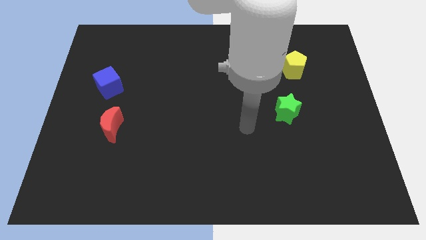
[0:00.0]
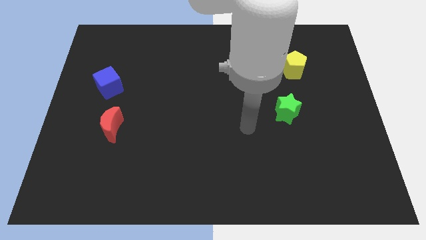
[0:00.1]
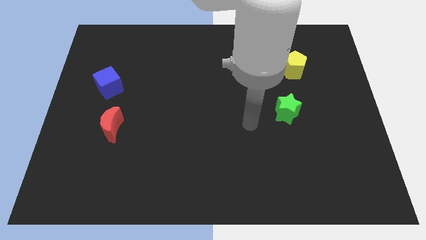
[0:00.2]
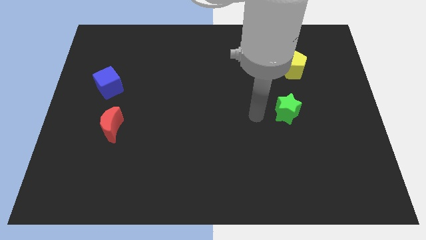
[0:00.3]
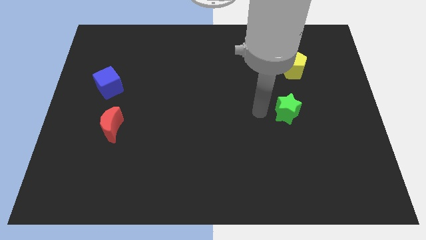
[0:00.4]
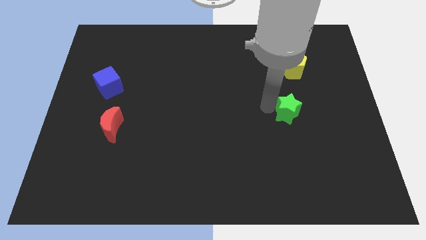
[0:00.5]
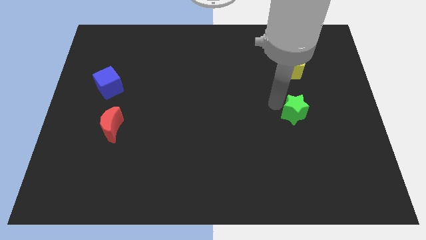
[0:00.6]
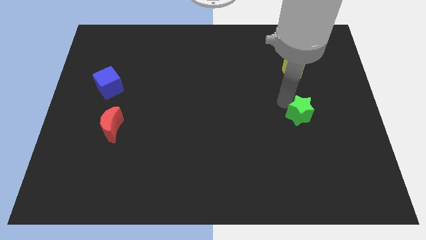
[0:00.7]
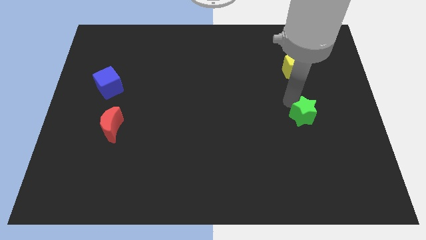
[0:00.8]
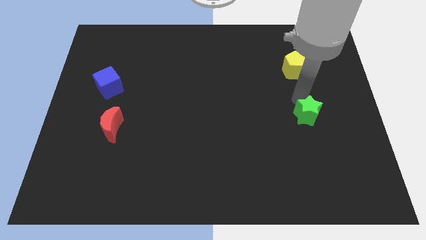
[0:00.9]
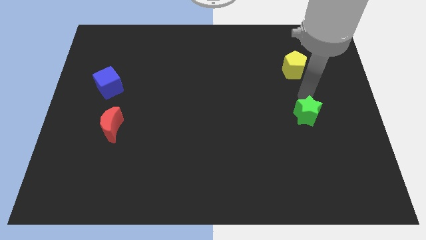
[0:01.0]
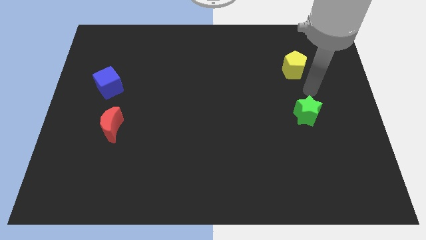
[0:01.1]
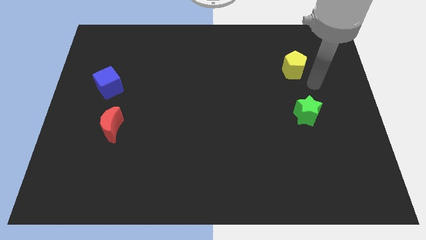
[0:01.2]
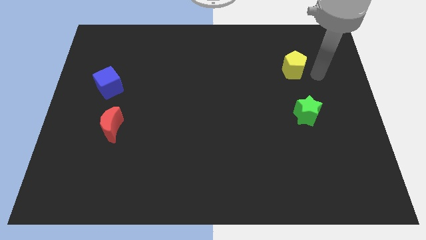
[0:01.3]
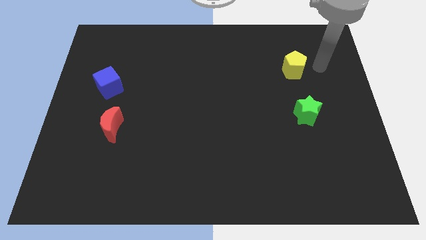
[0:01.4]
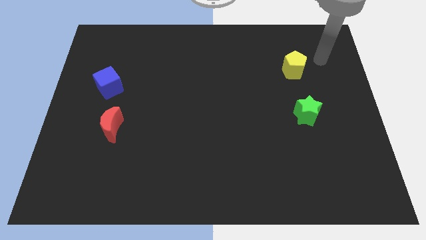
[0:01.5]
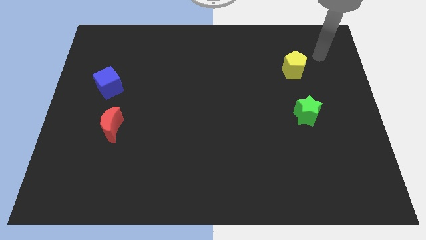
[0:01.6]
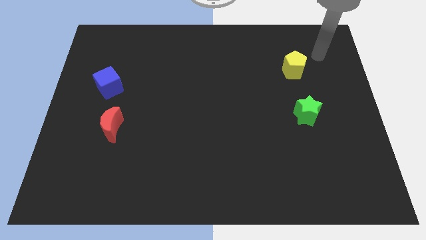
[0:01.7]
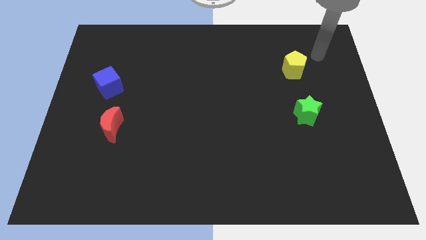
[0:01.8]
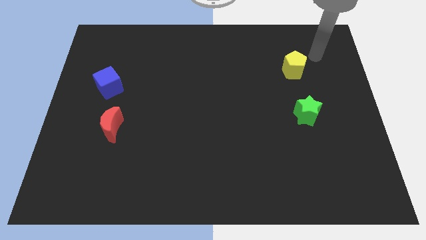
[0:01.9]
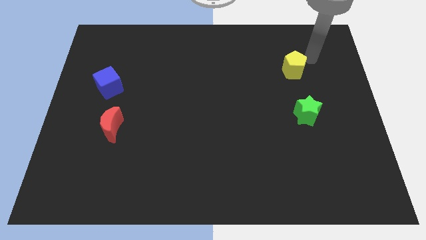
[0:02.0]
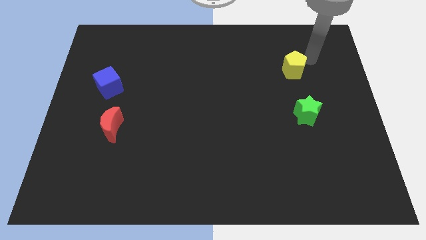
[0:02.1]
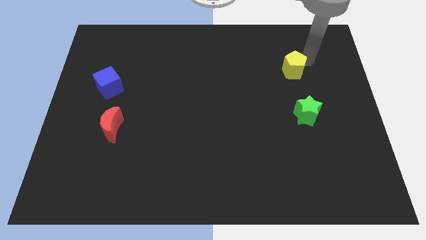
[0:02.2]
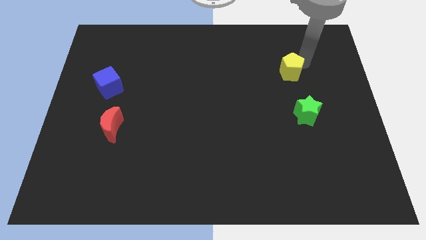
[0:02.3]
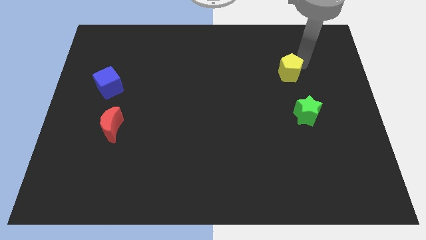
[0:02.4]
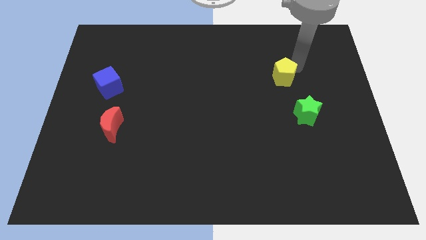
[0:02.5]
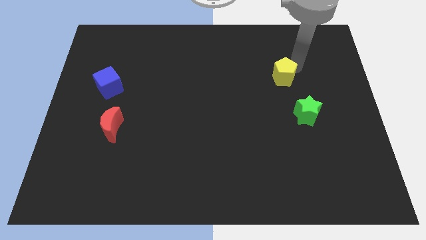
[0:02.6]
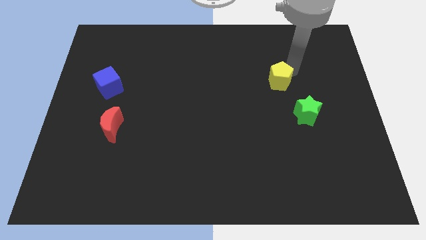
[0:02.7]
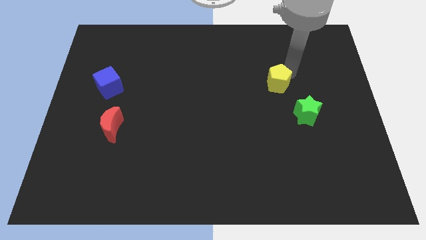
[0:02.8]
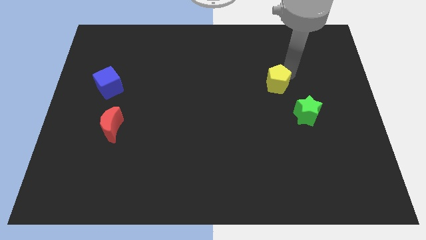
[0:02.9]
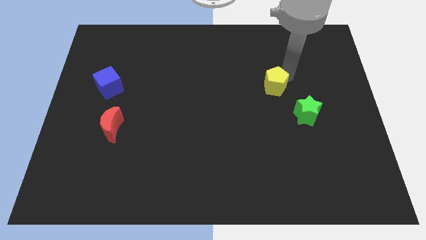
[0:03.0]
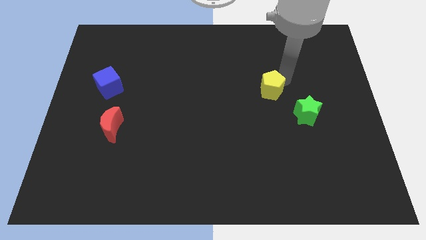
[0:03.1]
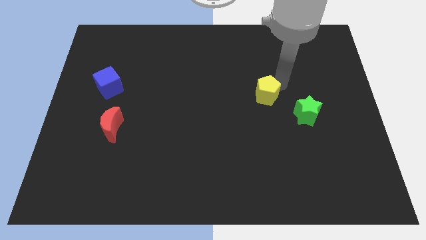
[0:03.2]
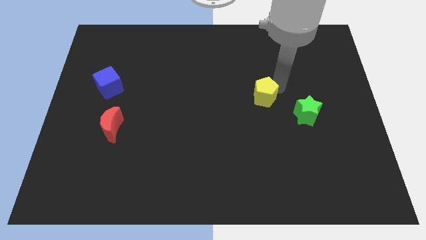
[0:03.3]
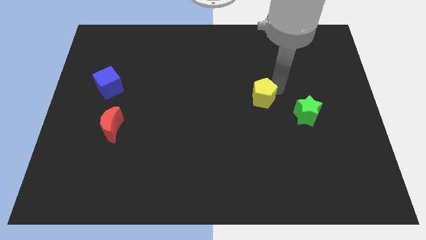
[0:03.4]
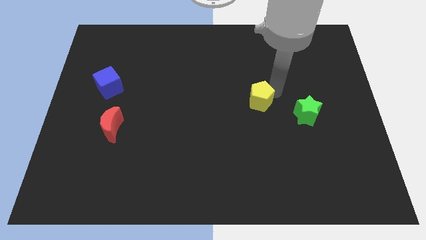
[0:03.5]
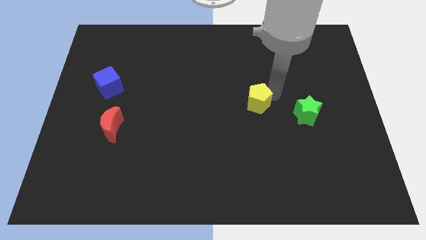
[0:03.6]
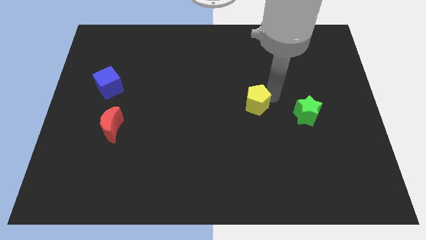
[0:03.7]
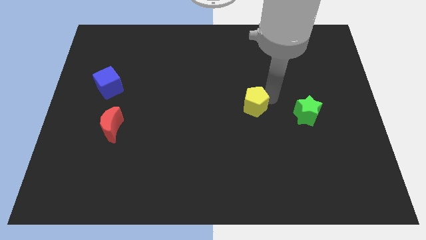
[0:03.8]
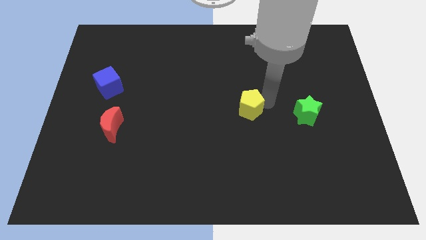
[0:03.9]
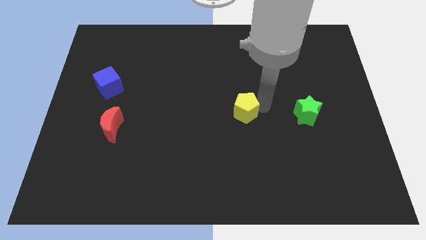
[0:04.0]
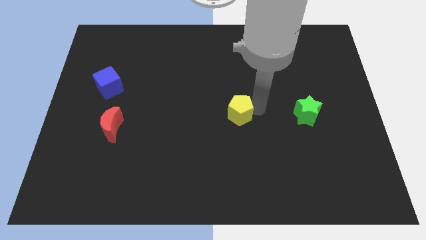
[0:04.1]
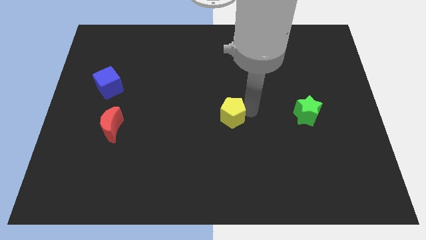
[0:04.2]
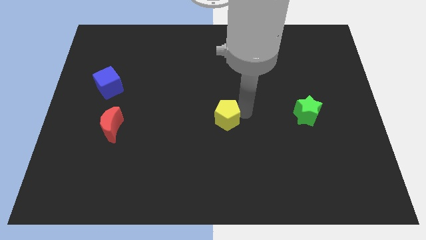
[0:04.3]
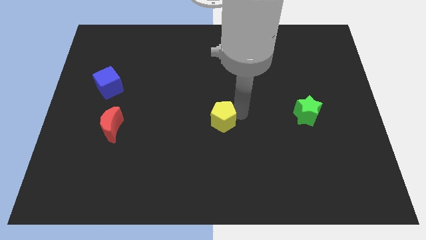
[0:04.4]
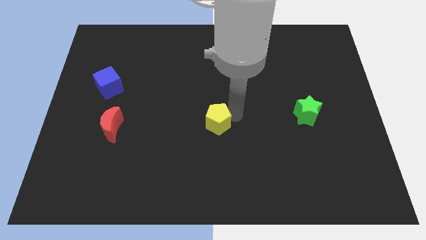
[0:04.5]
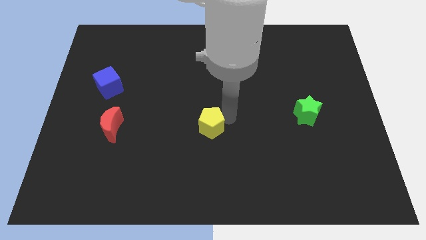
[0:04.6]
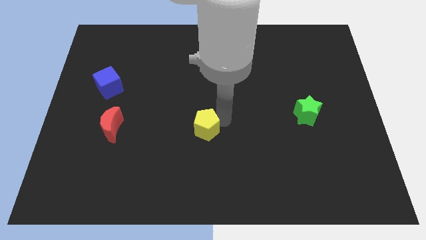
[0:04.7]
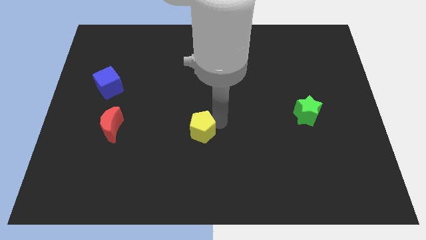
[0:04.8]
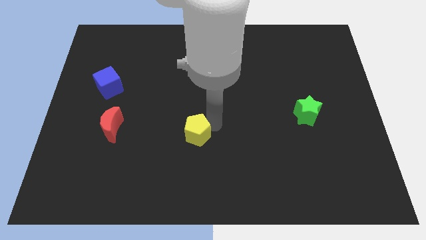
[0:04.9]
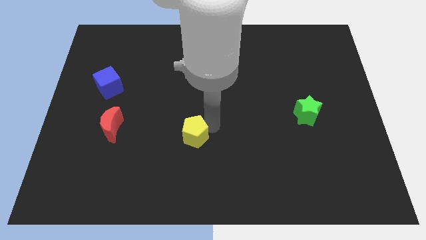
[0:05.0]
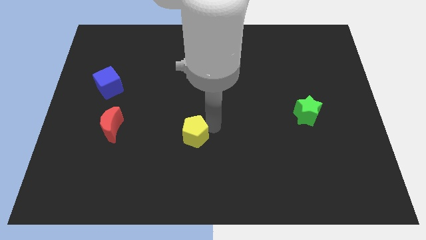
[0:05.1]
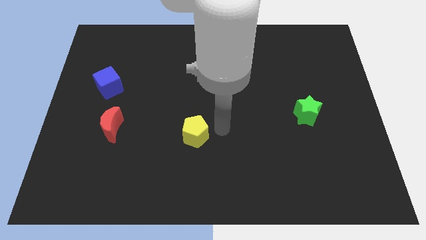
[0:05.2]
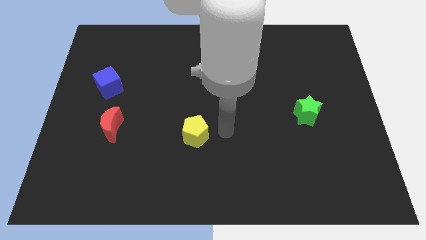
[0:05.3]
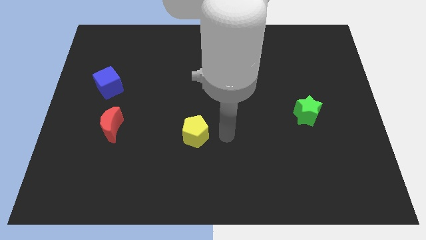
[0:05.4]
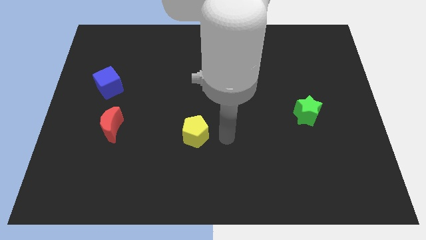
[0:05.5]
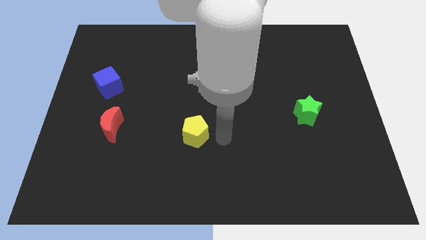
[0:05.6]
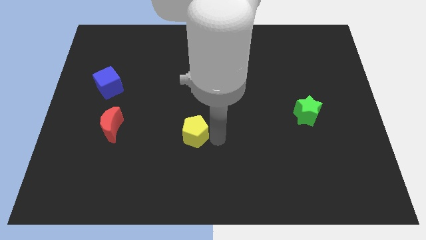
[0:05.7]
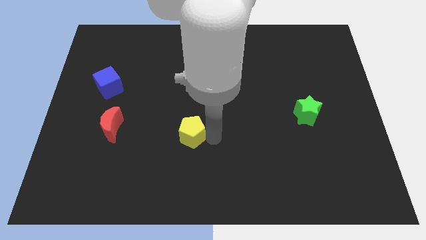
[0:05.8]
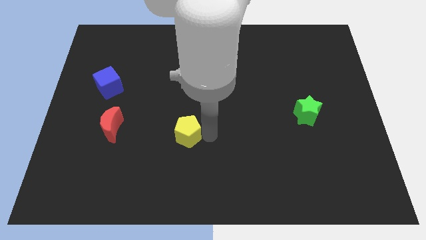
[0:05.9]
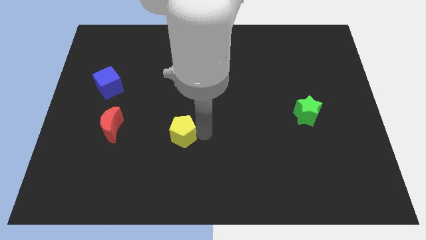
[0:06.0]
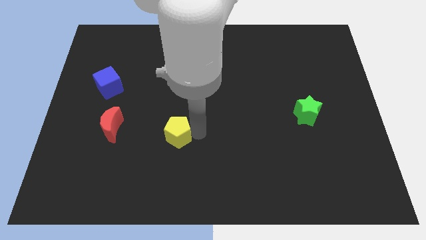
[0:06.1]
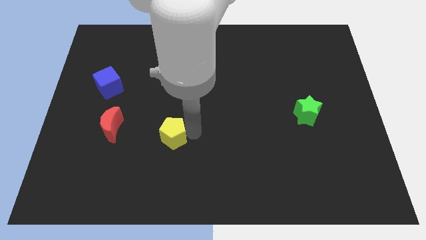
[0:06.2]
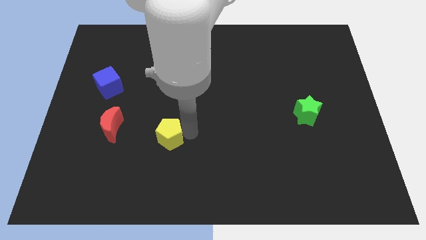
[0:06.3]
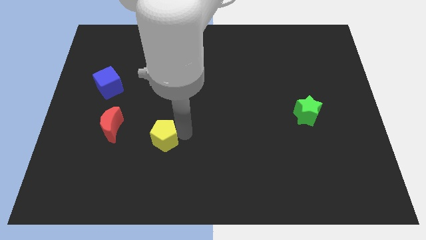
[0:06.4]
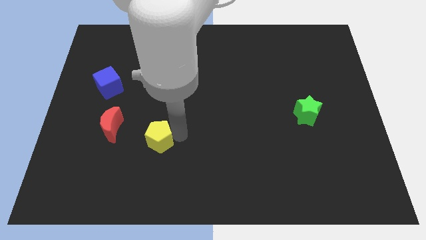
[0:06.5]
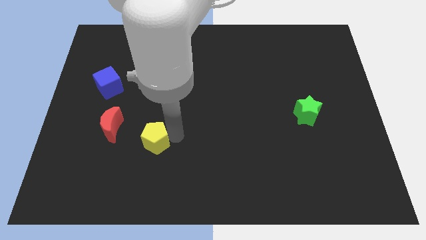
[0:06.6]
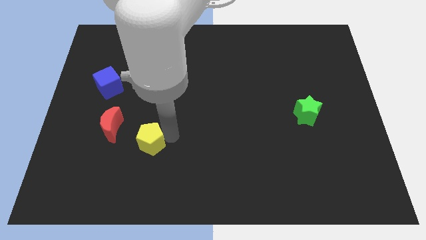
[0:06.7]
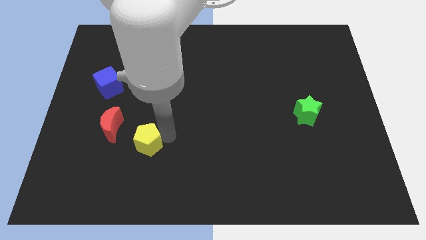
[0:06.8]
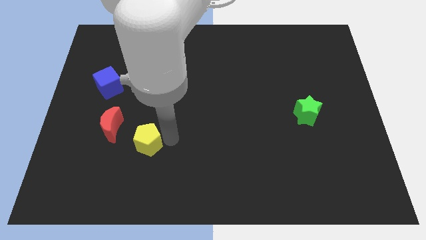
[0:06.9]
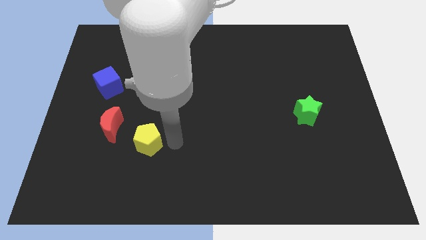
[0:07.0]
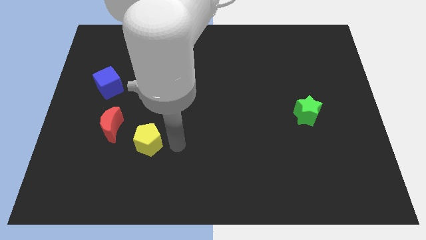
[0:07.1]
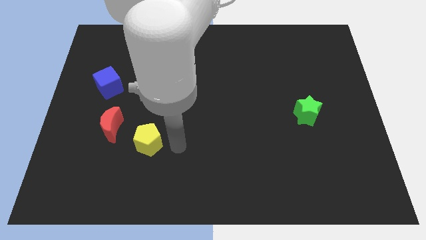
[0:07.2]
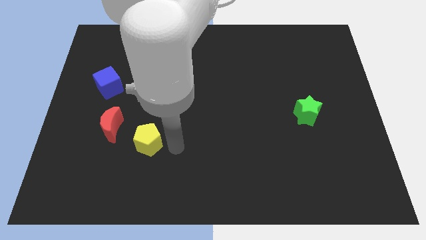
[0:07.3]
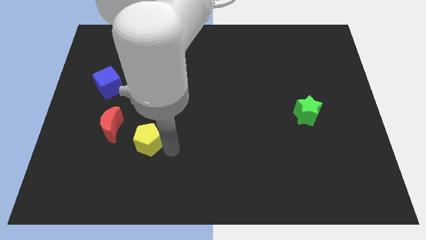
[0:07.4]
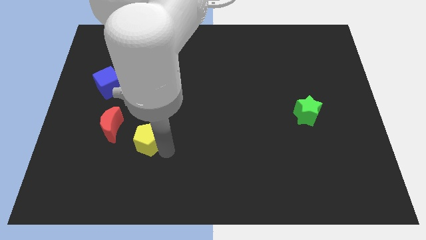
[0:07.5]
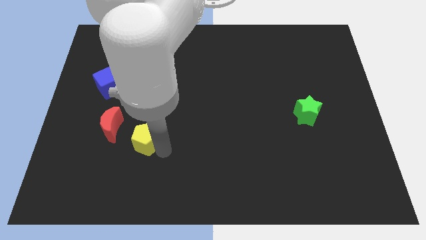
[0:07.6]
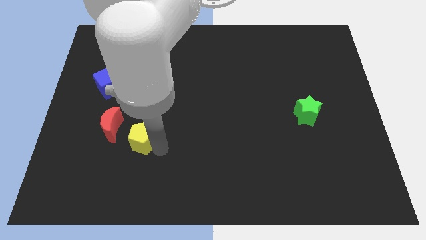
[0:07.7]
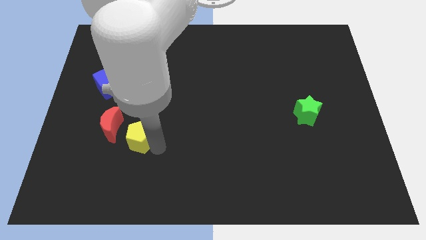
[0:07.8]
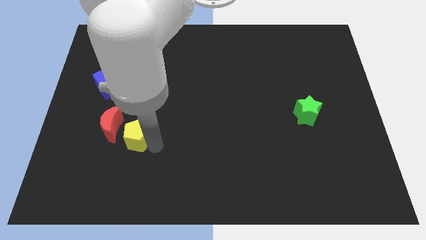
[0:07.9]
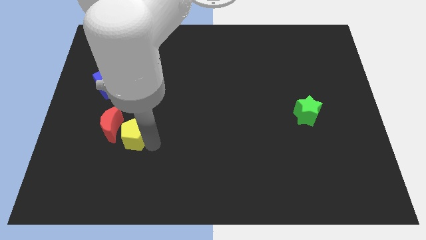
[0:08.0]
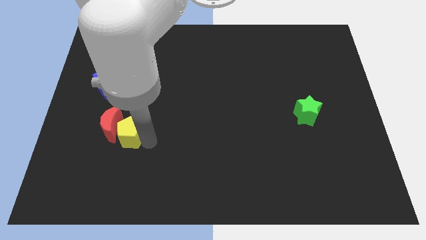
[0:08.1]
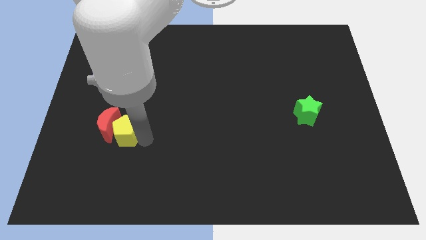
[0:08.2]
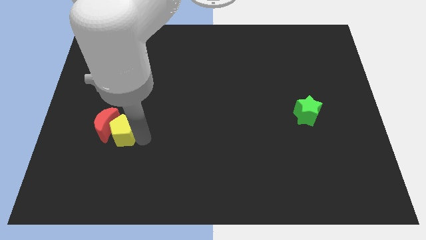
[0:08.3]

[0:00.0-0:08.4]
move the yellow block to the red moon
